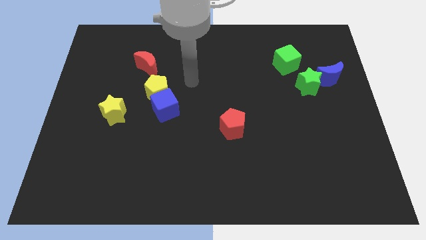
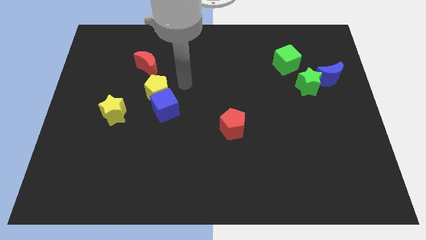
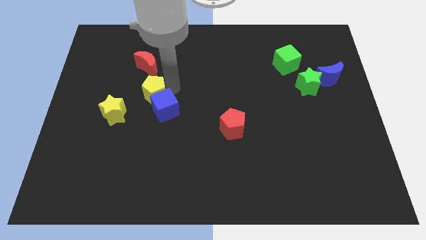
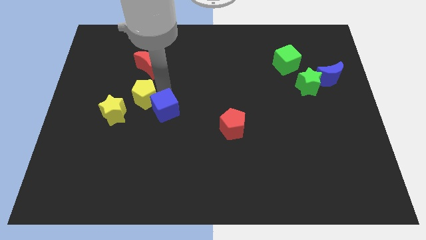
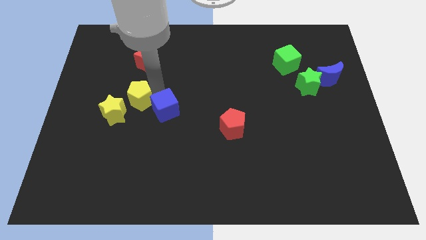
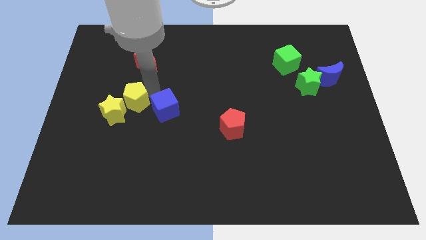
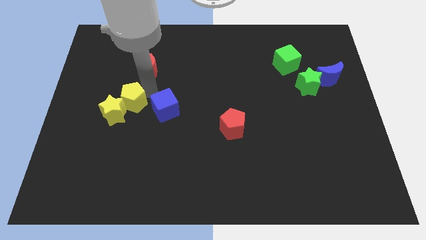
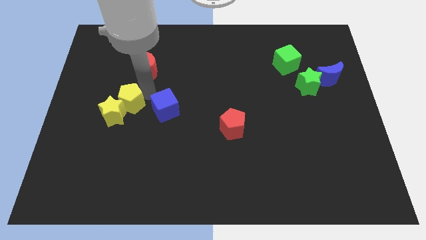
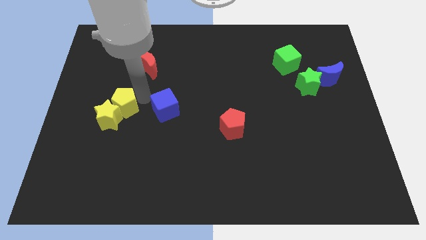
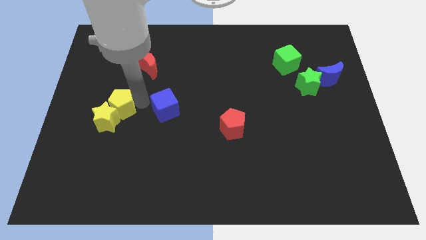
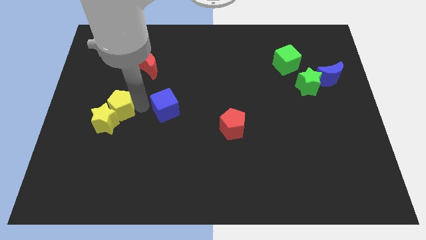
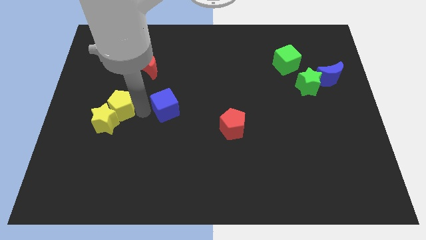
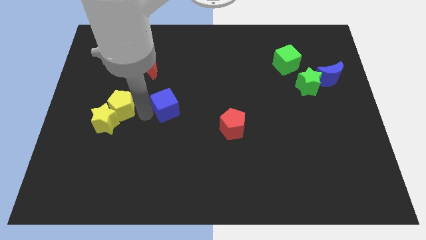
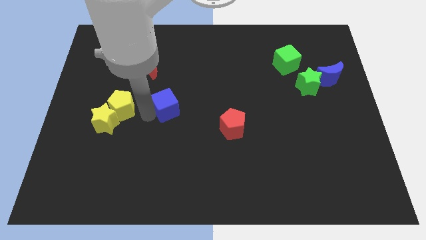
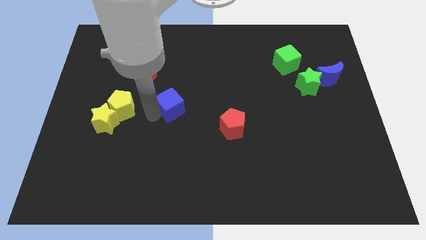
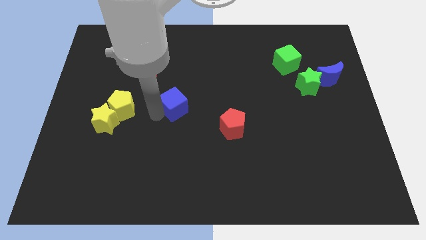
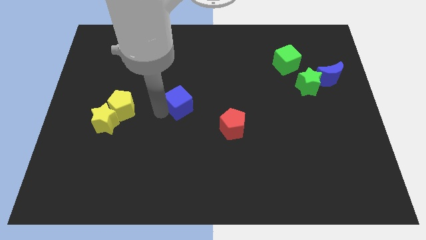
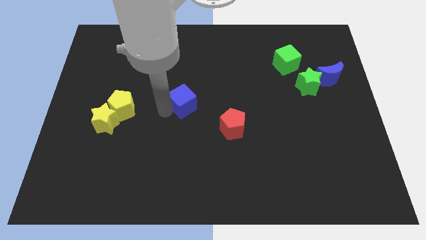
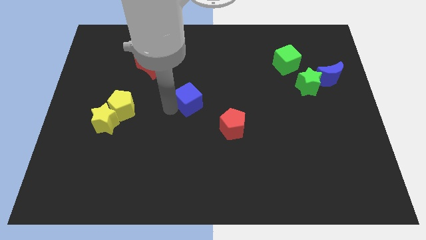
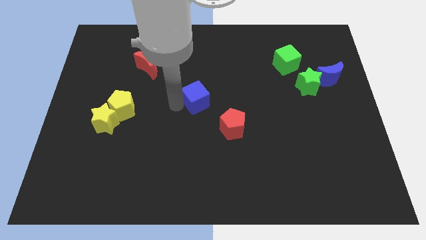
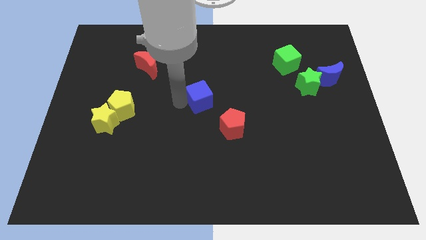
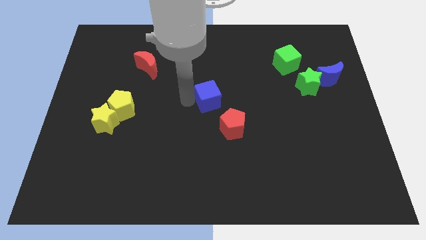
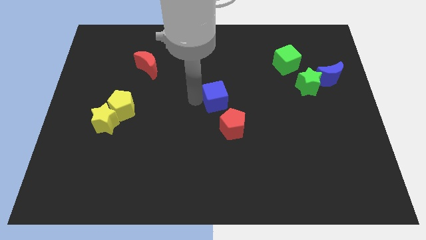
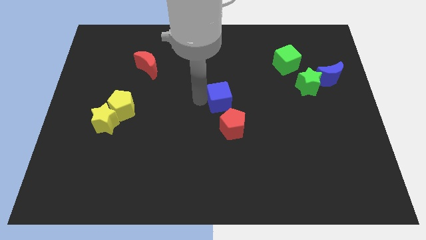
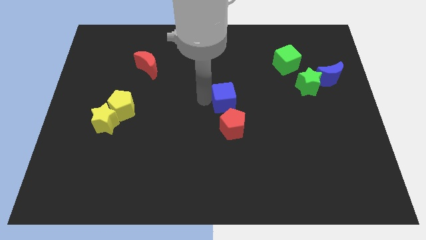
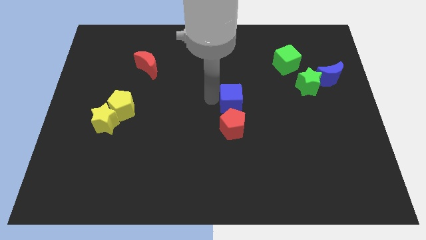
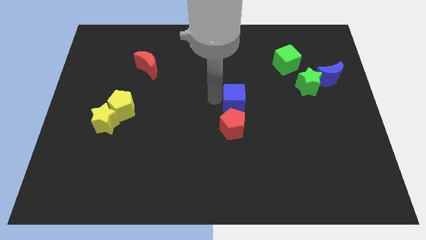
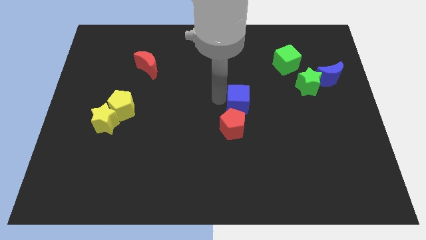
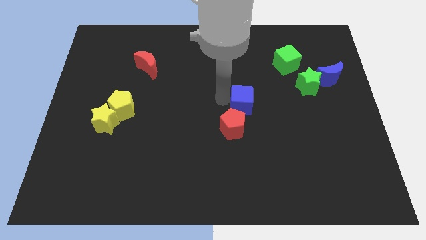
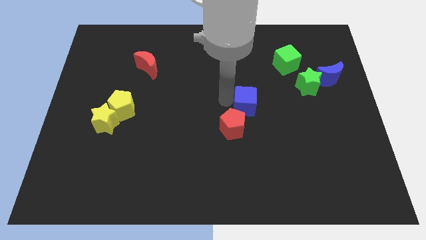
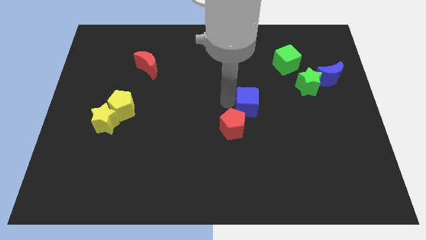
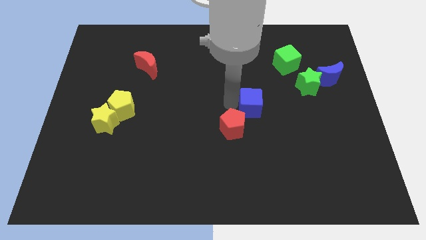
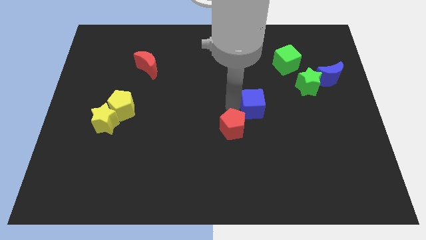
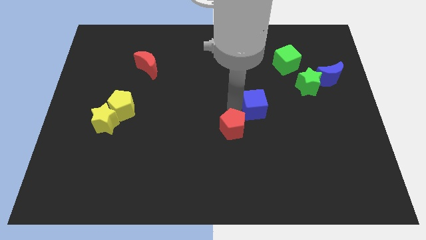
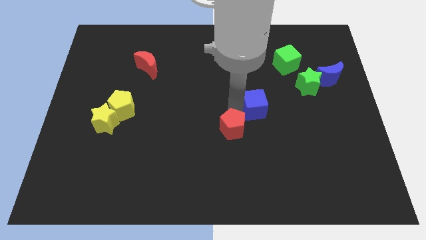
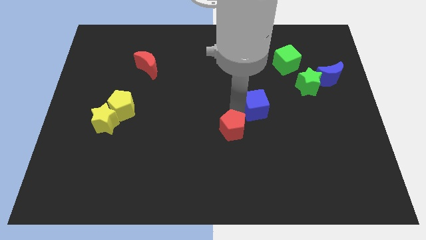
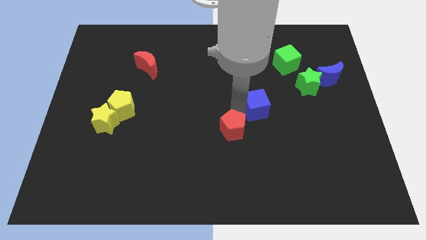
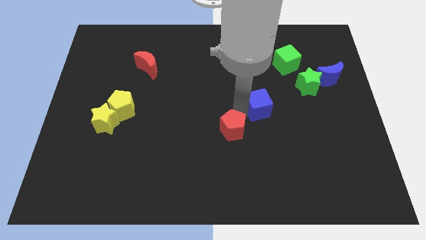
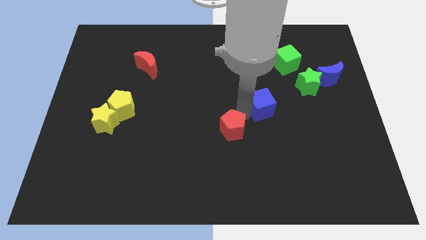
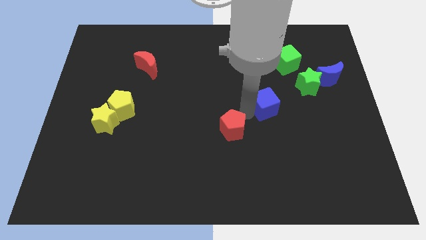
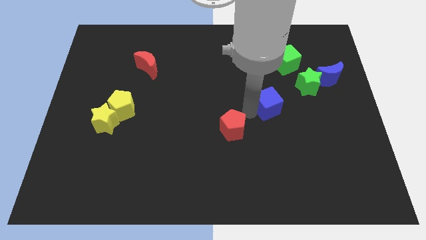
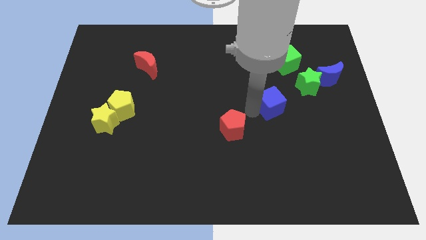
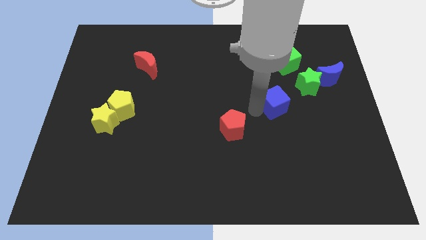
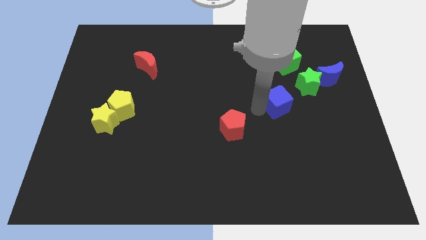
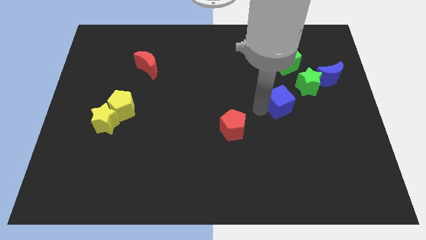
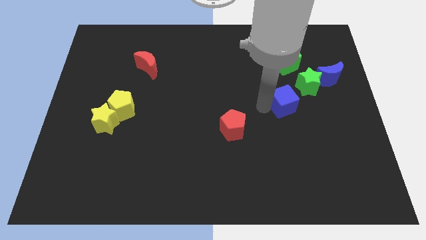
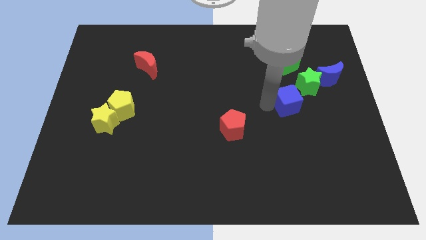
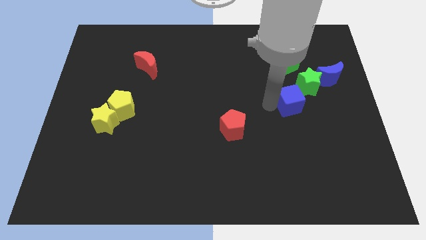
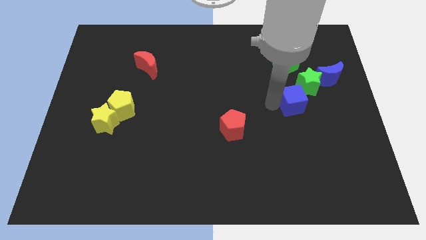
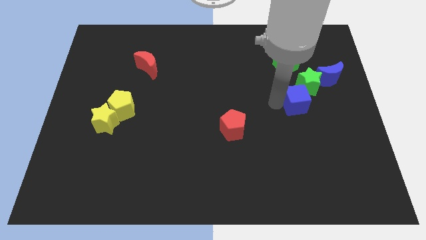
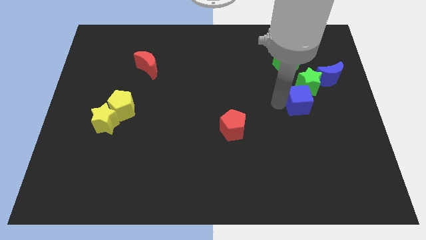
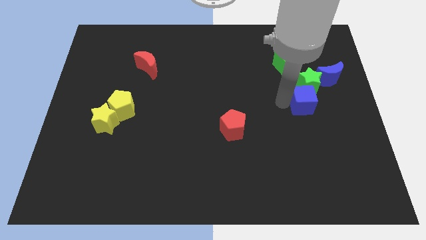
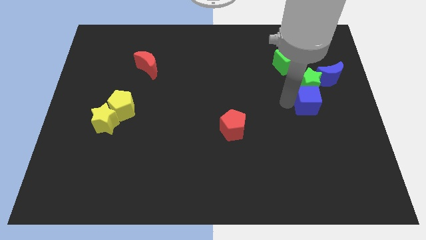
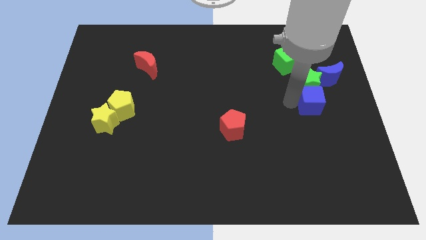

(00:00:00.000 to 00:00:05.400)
push the blue cube close to the green star

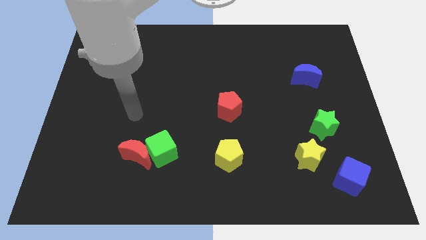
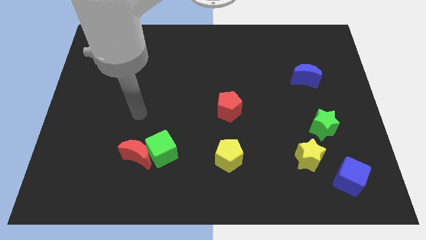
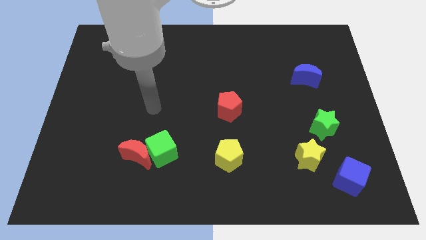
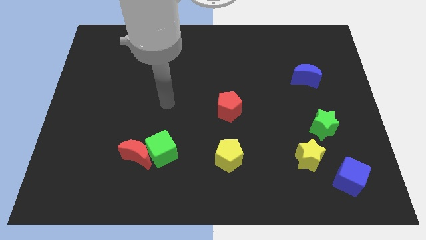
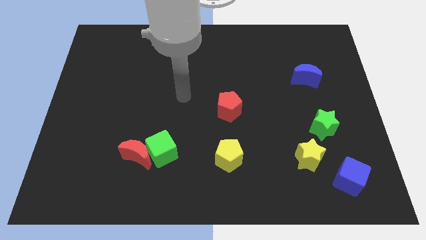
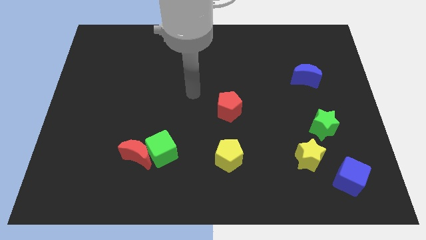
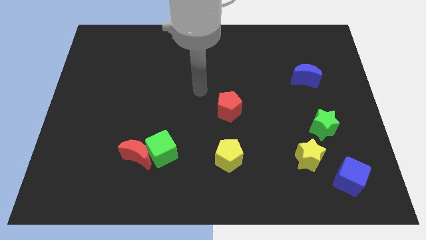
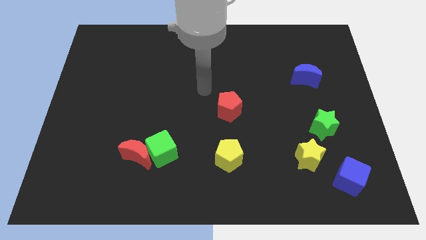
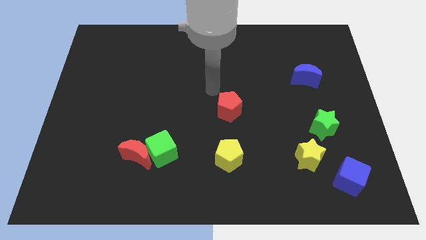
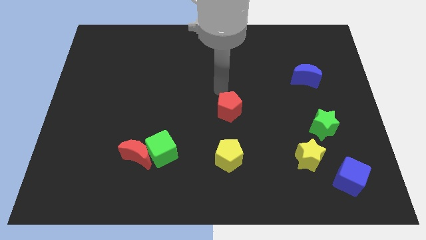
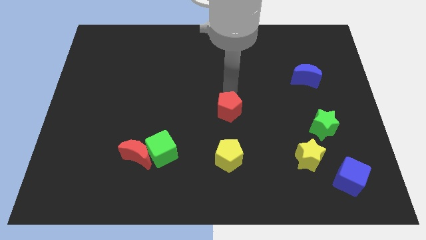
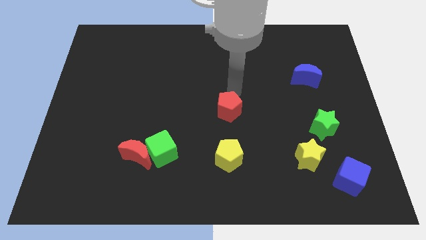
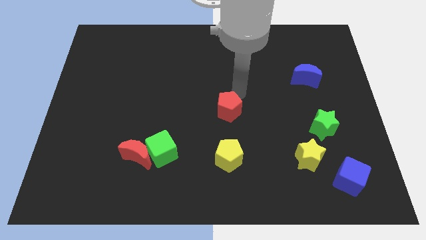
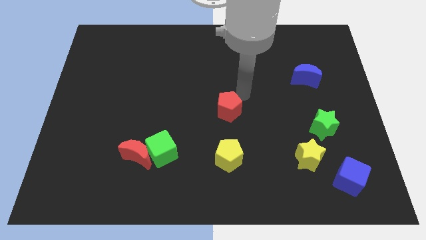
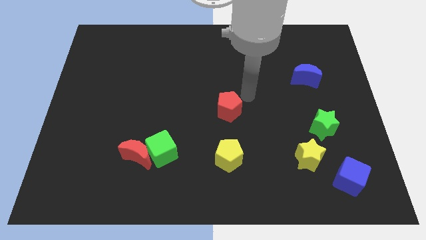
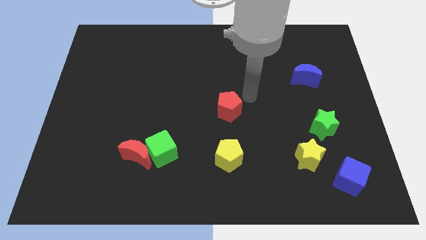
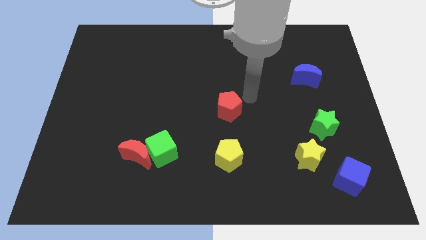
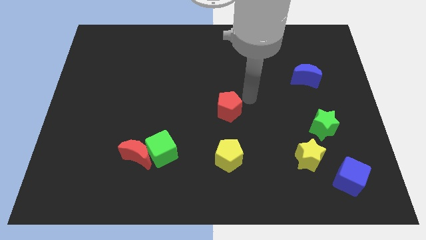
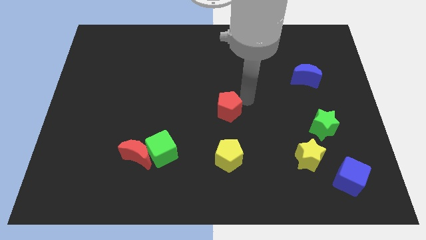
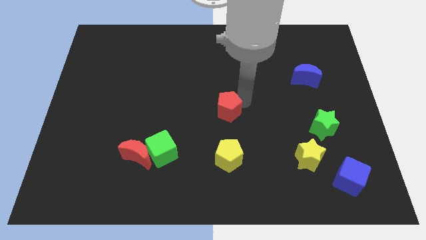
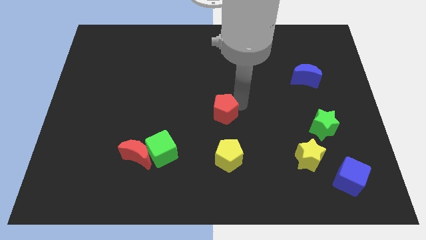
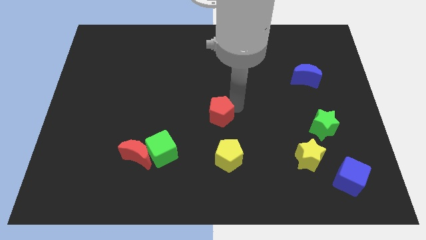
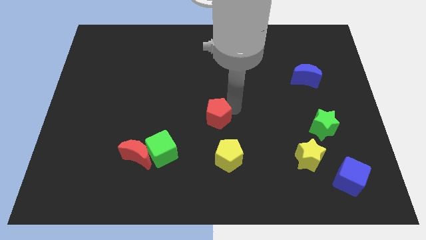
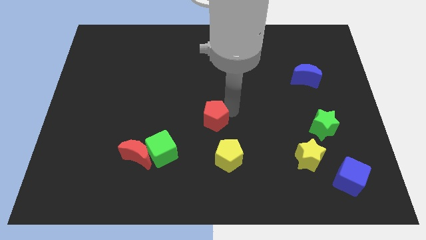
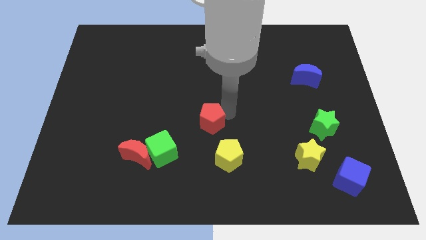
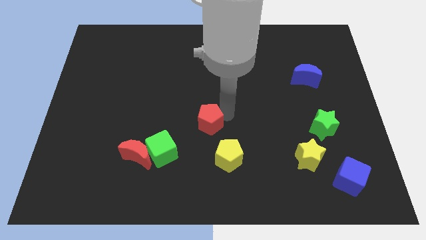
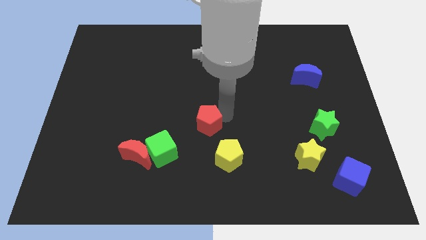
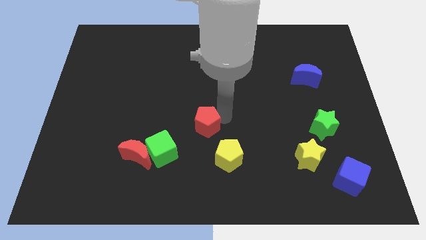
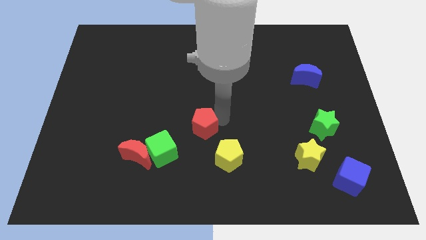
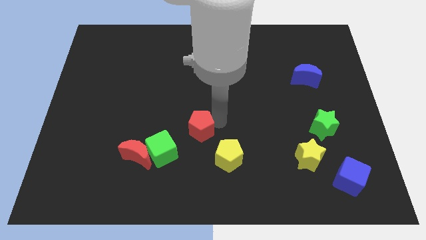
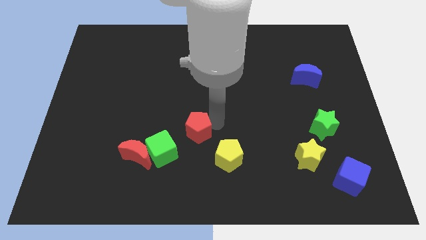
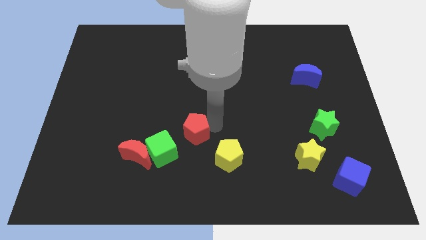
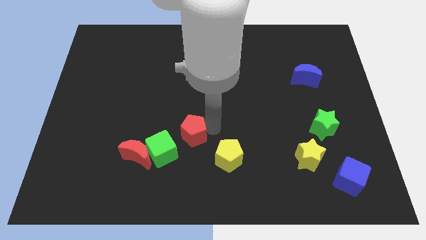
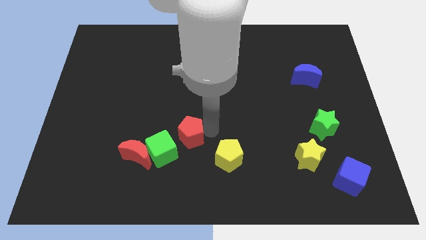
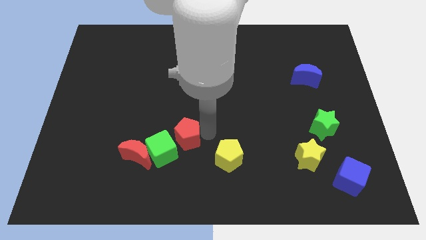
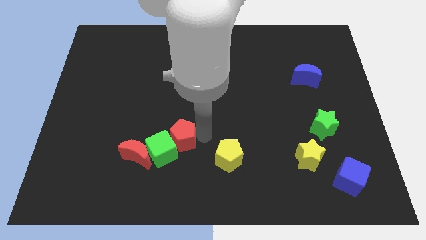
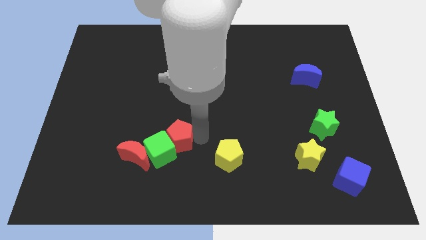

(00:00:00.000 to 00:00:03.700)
move the red pentagon to the green cube
